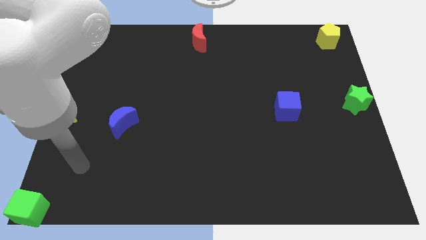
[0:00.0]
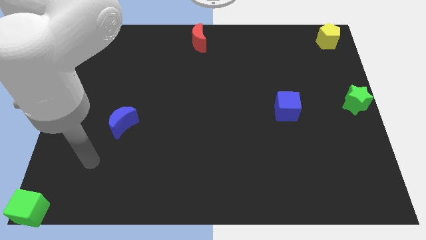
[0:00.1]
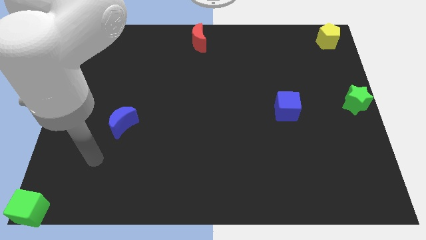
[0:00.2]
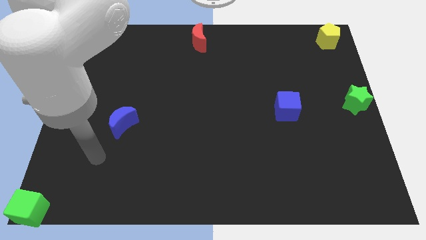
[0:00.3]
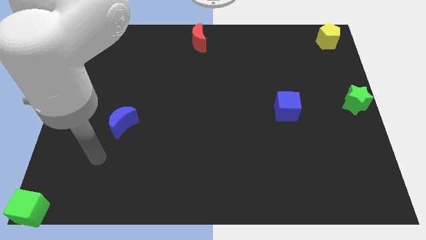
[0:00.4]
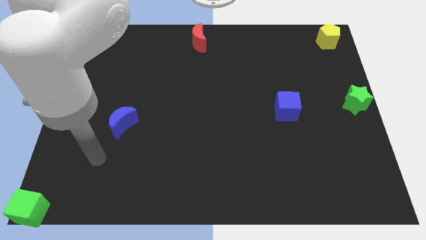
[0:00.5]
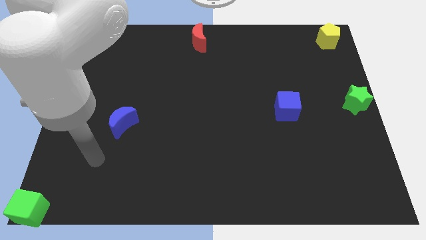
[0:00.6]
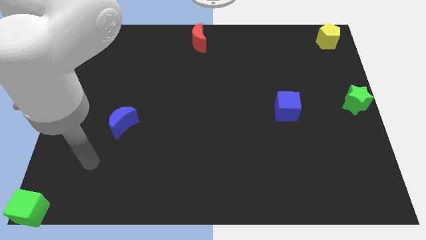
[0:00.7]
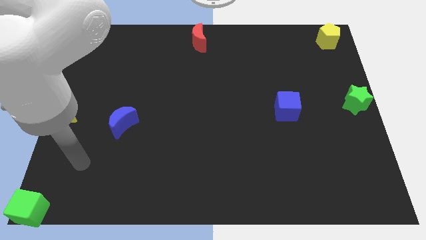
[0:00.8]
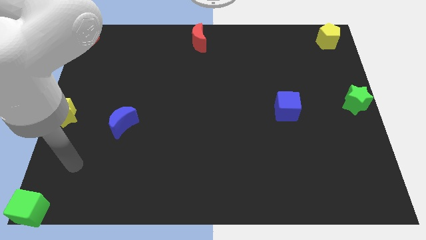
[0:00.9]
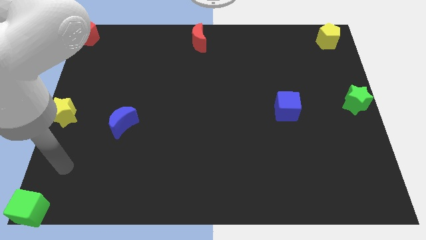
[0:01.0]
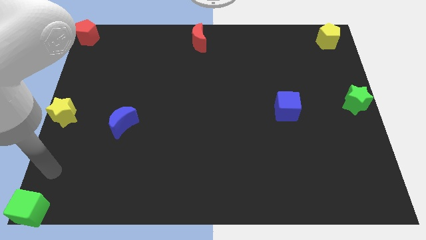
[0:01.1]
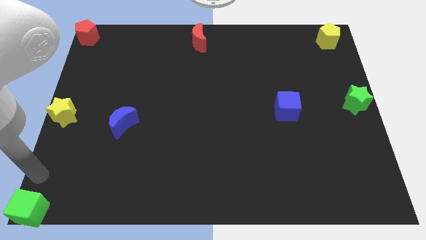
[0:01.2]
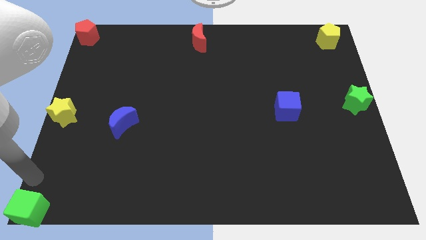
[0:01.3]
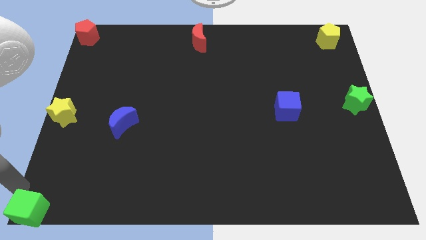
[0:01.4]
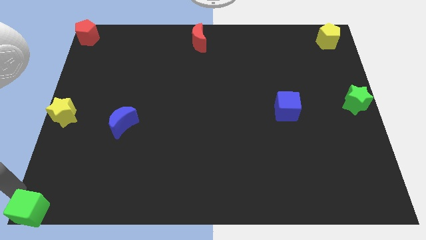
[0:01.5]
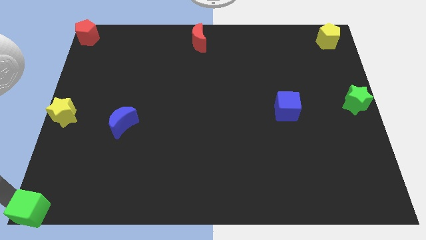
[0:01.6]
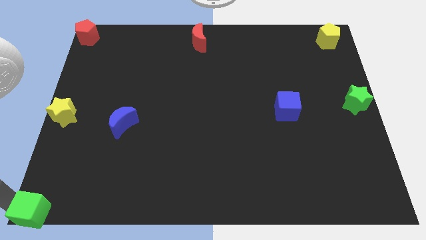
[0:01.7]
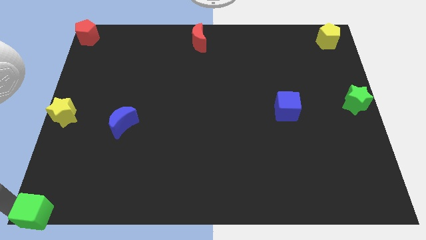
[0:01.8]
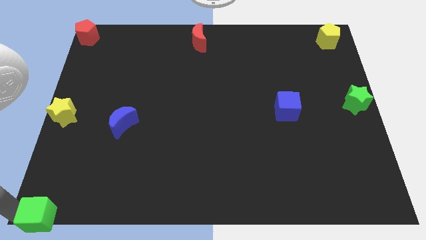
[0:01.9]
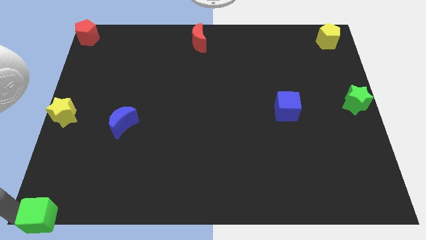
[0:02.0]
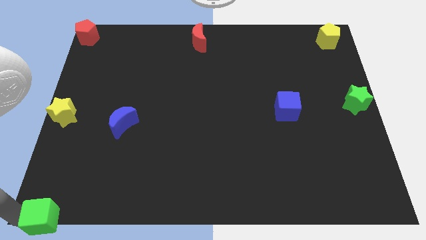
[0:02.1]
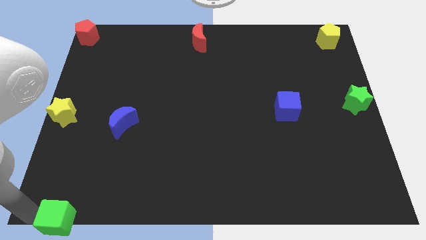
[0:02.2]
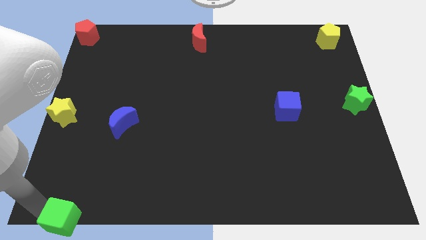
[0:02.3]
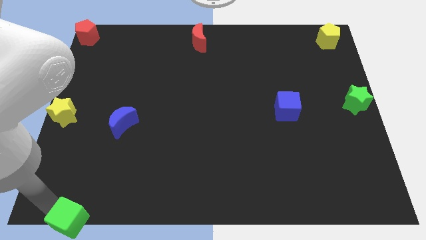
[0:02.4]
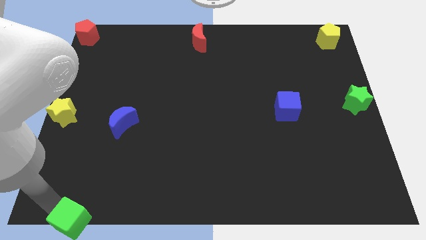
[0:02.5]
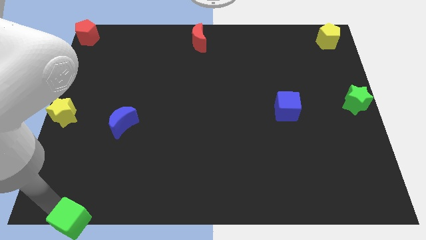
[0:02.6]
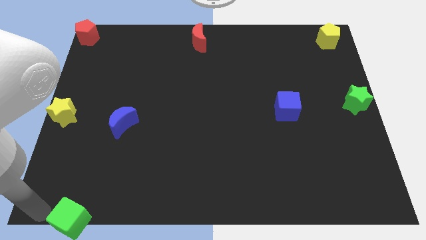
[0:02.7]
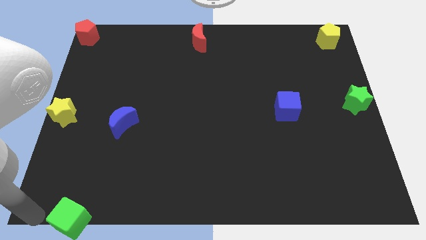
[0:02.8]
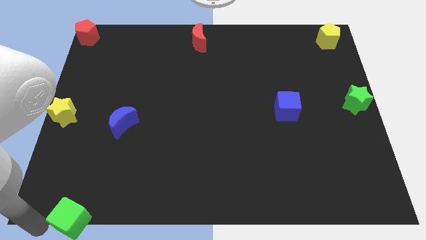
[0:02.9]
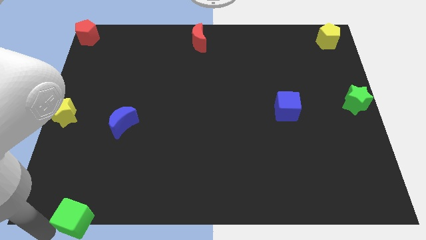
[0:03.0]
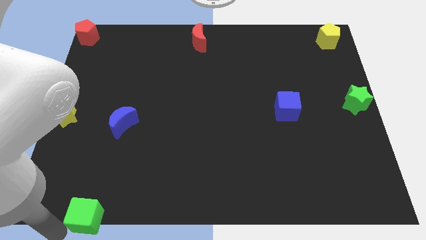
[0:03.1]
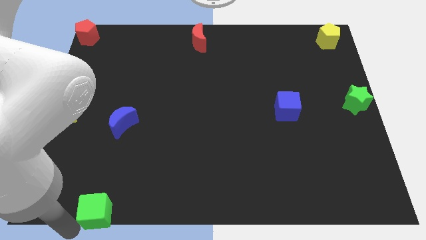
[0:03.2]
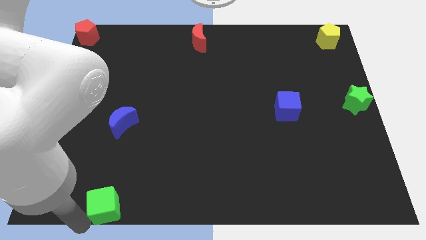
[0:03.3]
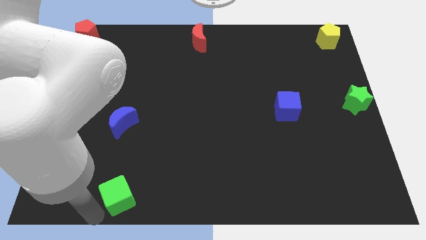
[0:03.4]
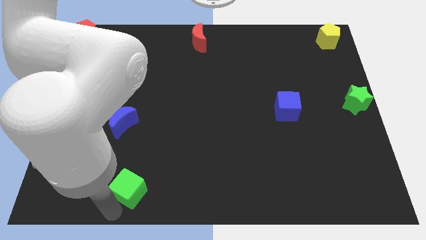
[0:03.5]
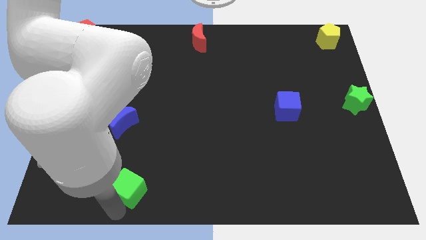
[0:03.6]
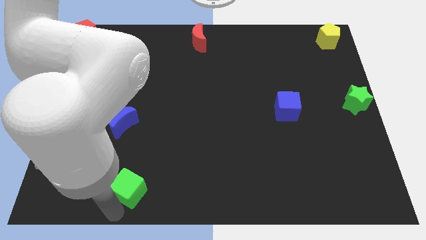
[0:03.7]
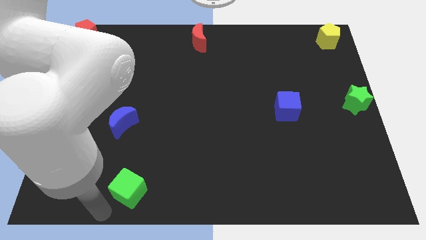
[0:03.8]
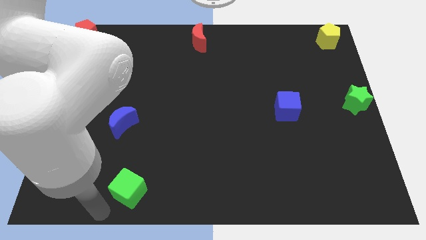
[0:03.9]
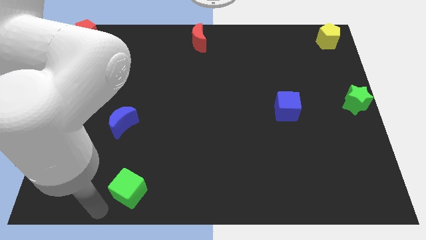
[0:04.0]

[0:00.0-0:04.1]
push the green cube towards the right side of the board

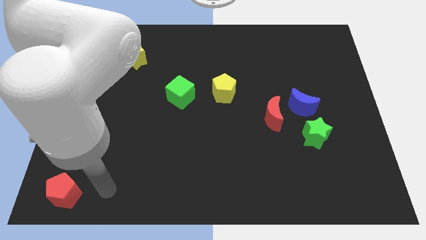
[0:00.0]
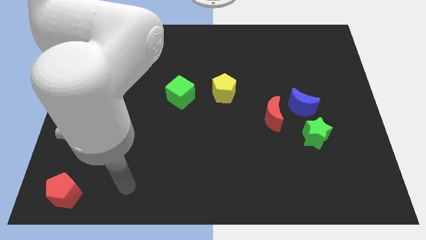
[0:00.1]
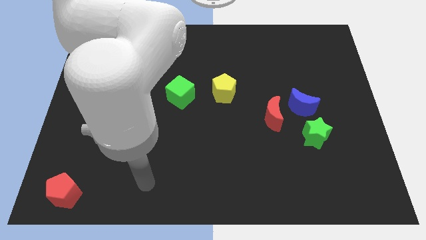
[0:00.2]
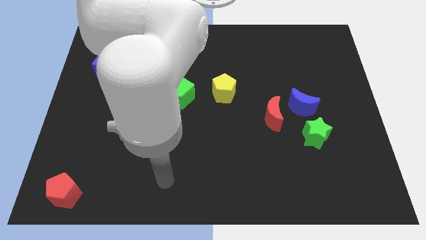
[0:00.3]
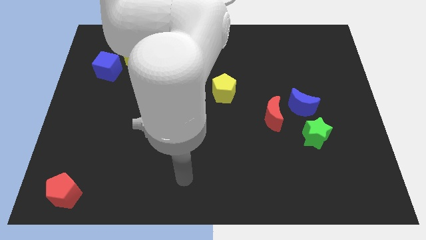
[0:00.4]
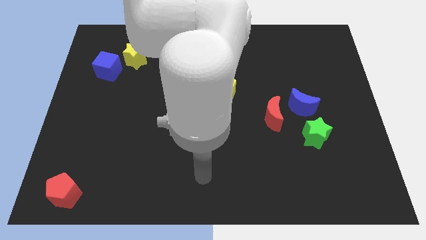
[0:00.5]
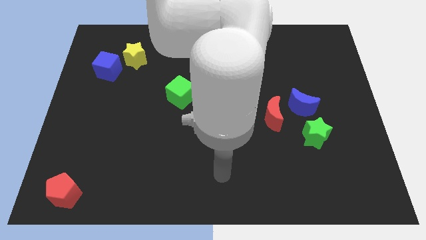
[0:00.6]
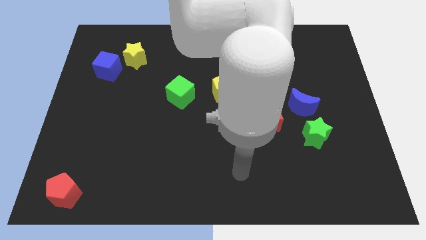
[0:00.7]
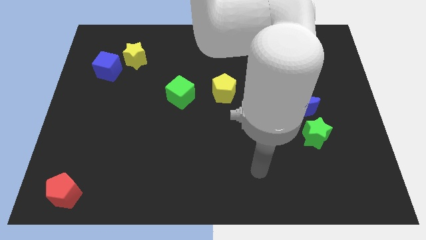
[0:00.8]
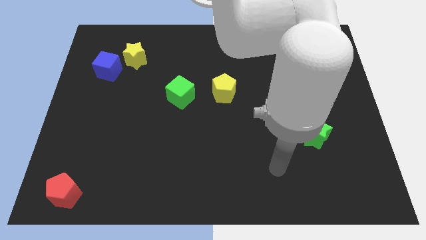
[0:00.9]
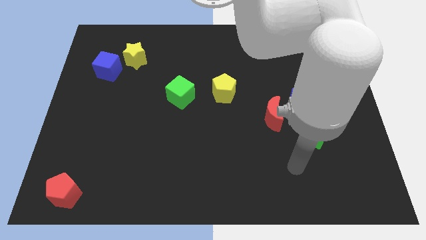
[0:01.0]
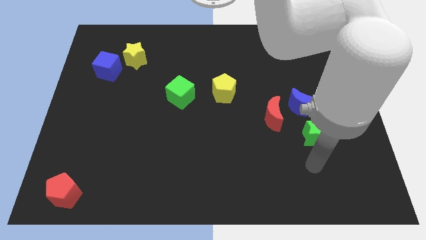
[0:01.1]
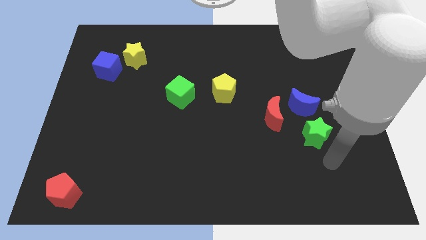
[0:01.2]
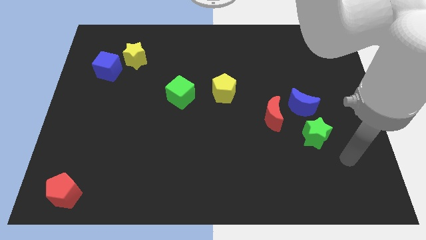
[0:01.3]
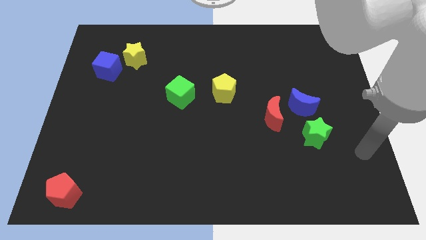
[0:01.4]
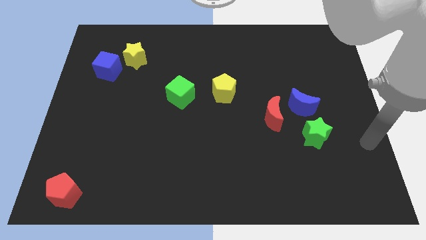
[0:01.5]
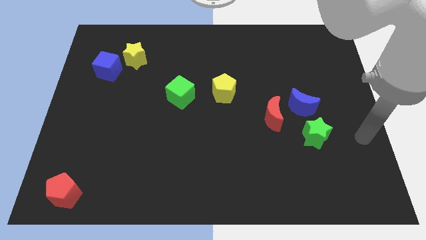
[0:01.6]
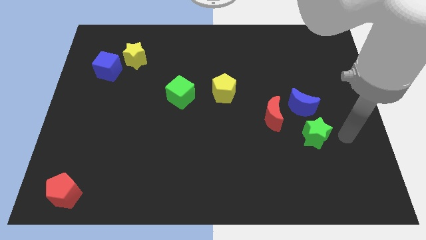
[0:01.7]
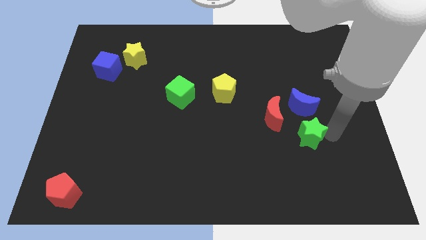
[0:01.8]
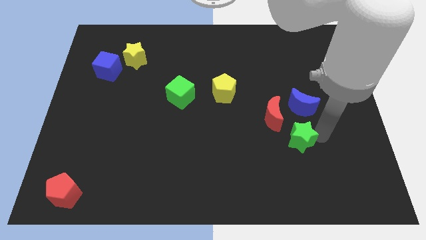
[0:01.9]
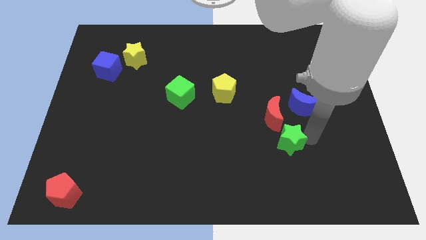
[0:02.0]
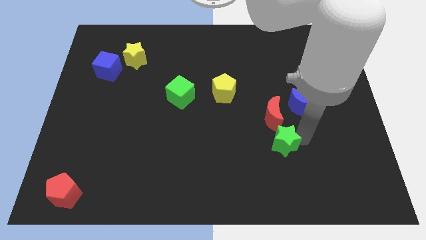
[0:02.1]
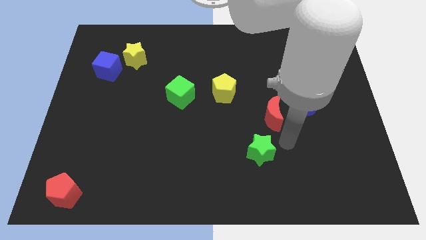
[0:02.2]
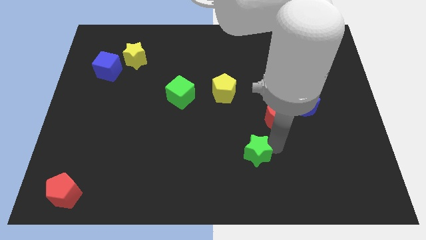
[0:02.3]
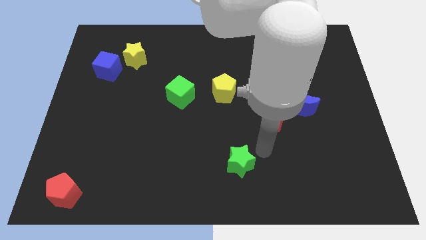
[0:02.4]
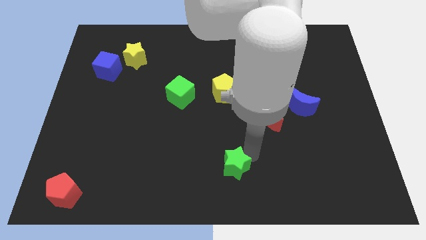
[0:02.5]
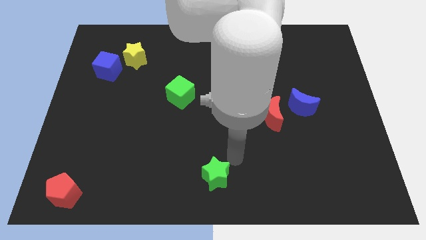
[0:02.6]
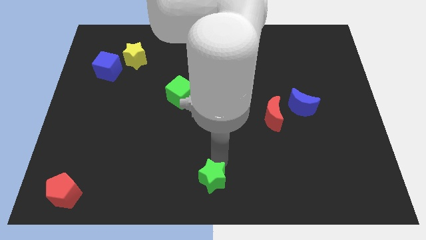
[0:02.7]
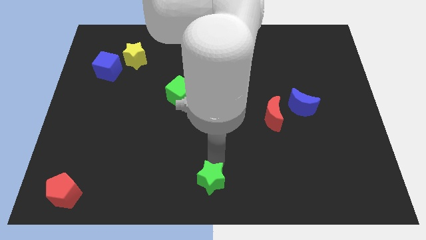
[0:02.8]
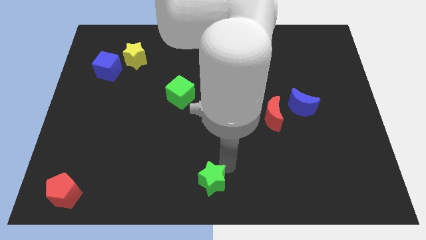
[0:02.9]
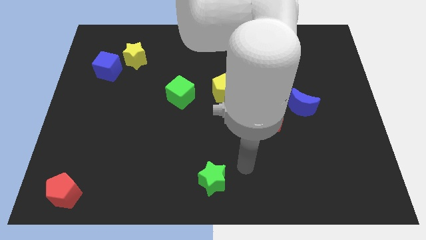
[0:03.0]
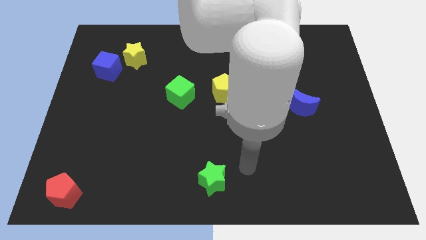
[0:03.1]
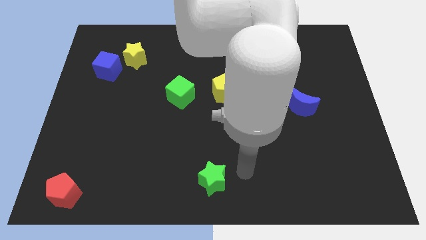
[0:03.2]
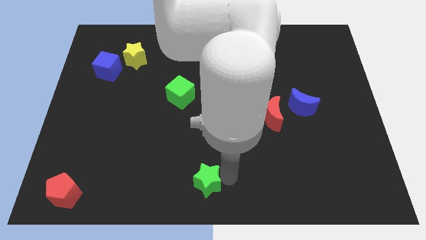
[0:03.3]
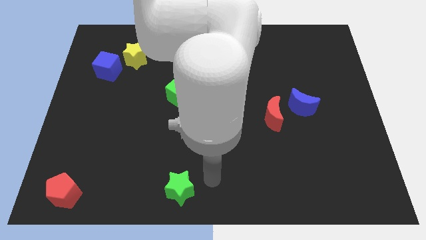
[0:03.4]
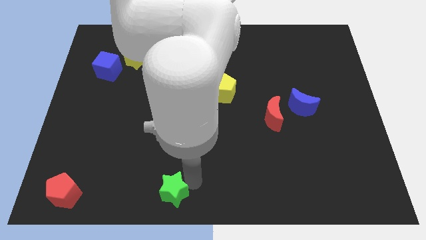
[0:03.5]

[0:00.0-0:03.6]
push the green star to the bottom of the green cube

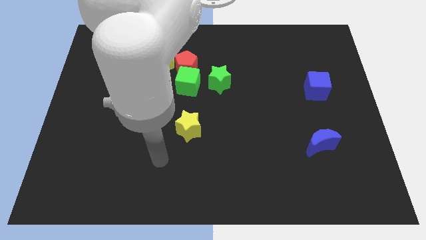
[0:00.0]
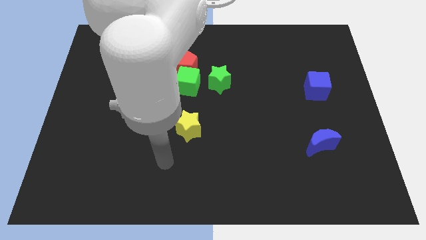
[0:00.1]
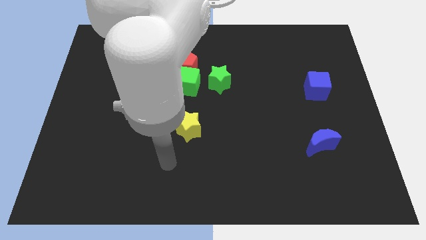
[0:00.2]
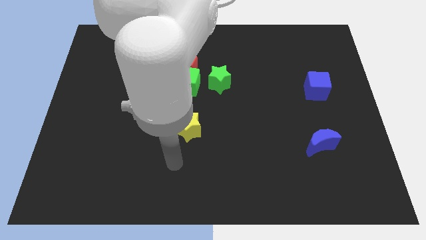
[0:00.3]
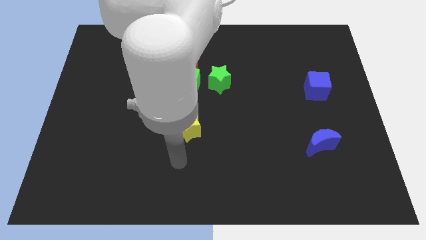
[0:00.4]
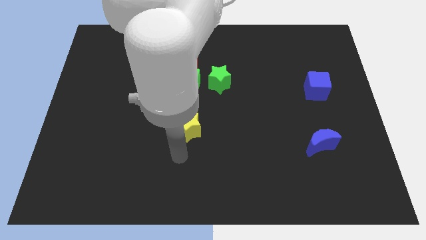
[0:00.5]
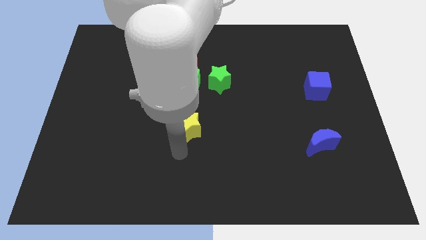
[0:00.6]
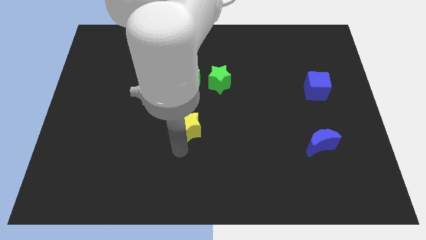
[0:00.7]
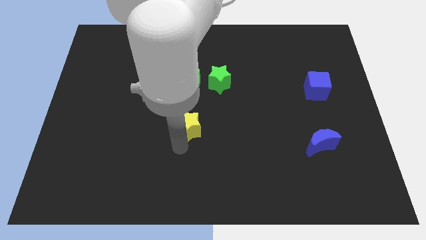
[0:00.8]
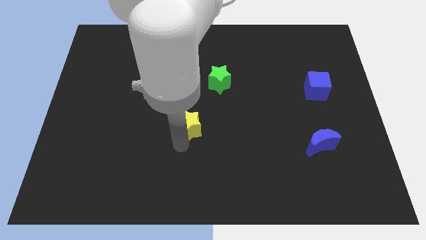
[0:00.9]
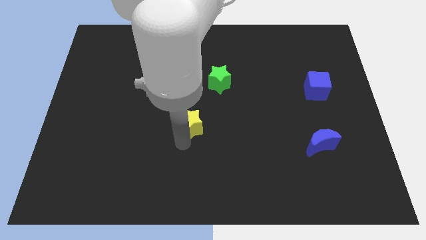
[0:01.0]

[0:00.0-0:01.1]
touch bottom of yellow star
